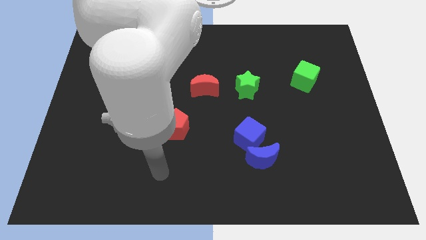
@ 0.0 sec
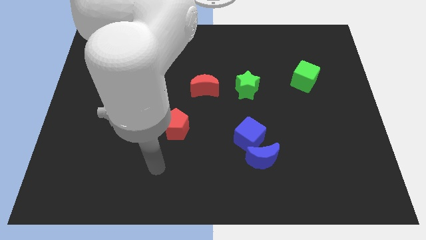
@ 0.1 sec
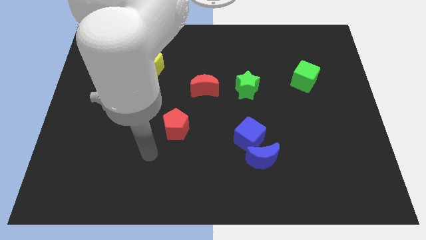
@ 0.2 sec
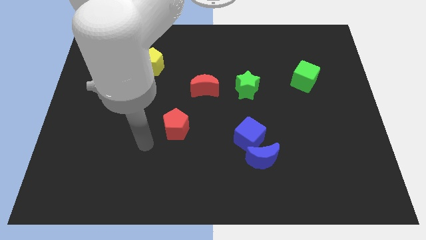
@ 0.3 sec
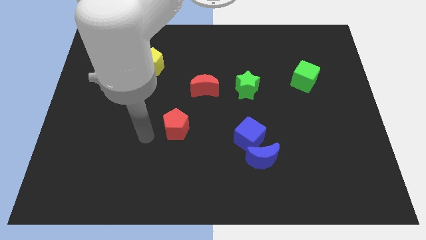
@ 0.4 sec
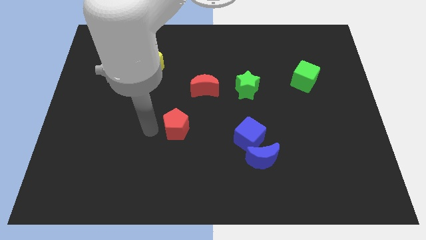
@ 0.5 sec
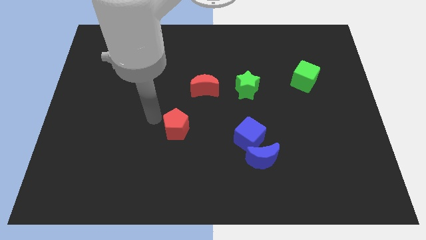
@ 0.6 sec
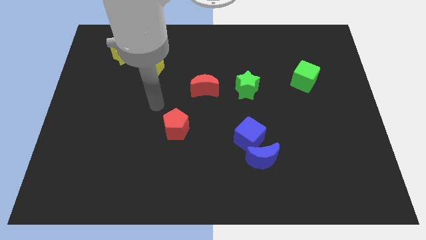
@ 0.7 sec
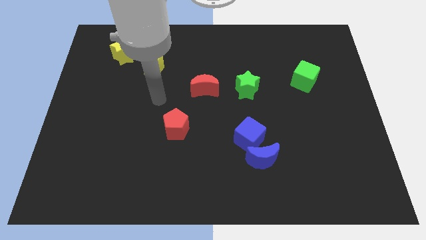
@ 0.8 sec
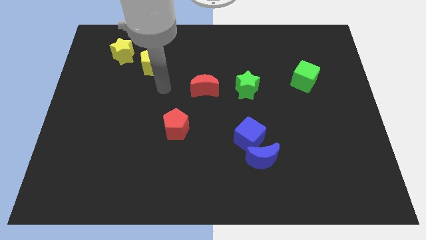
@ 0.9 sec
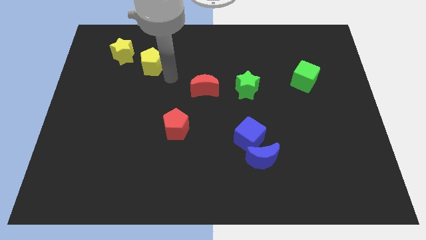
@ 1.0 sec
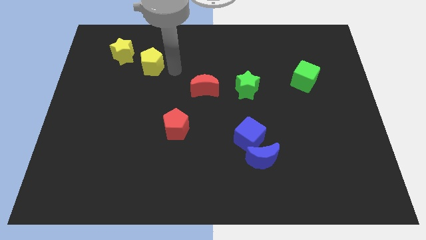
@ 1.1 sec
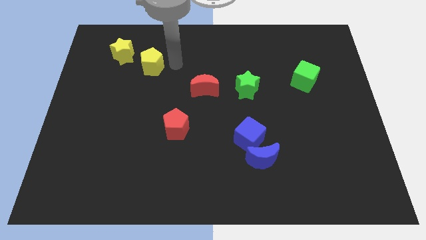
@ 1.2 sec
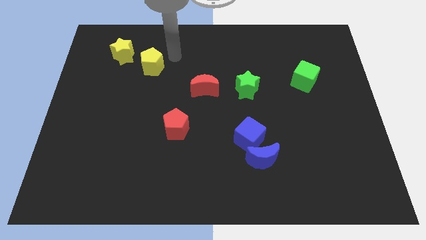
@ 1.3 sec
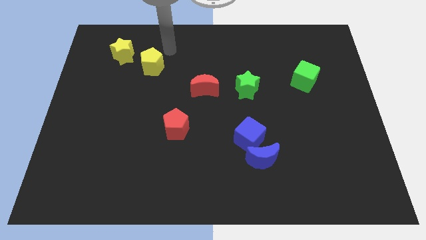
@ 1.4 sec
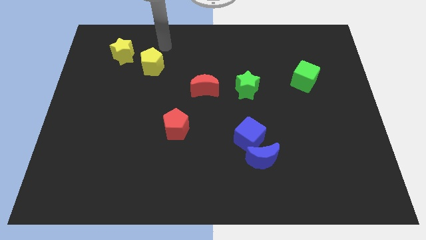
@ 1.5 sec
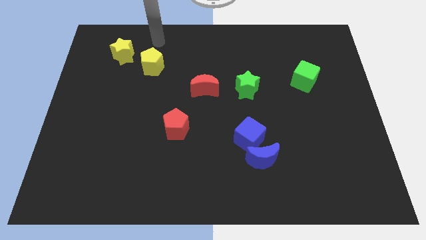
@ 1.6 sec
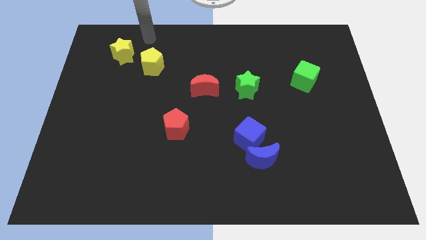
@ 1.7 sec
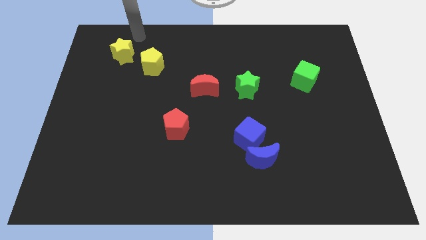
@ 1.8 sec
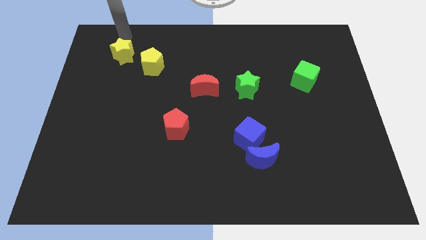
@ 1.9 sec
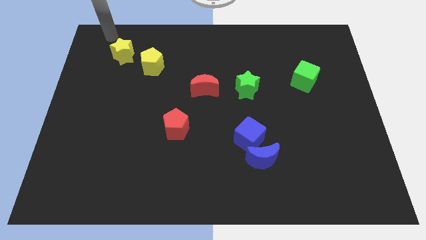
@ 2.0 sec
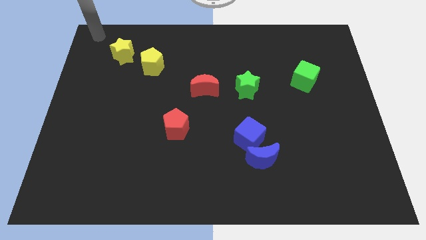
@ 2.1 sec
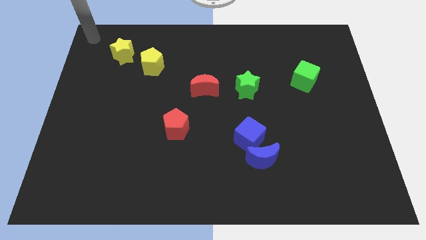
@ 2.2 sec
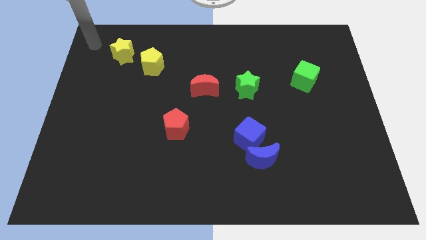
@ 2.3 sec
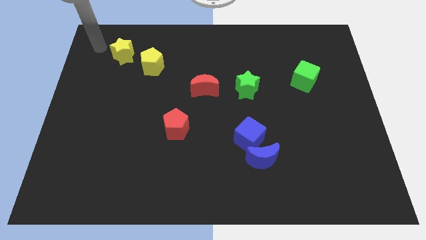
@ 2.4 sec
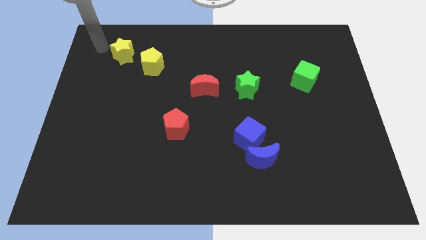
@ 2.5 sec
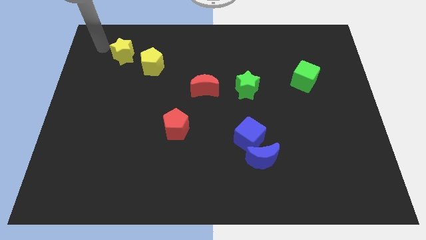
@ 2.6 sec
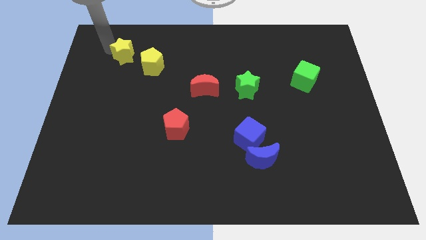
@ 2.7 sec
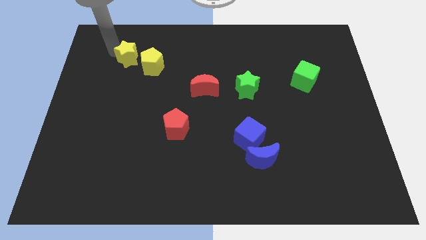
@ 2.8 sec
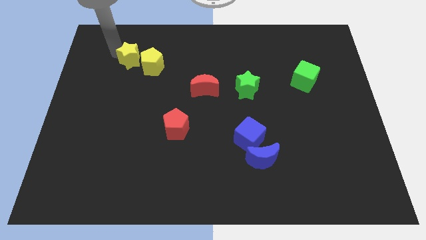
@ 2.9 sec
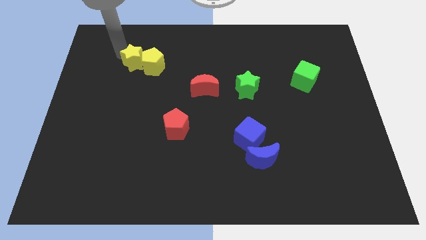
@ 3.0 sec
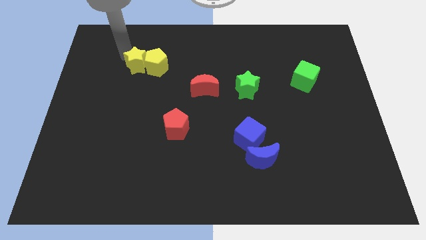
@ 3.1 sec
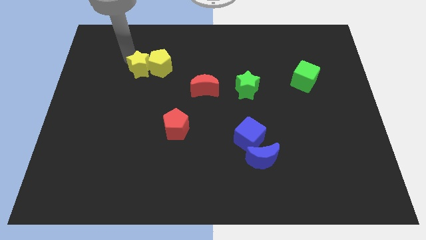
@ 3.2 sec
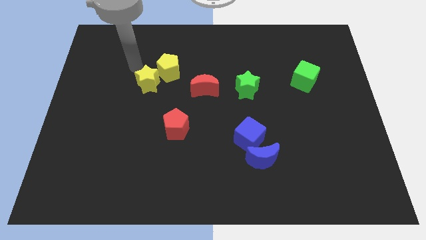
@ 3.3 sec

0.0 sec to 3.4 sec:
push the yellow star to the left side of the yellow pentagon

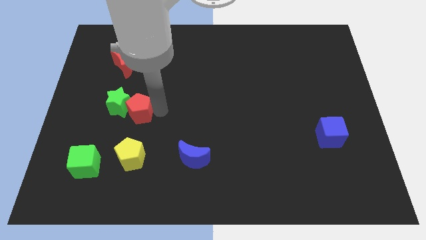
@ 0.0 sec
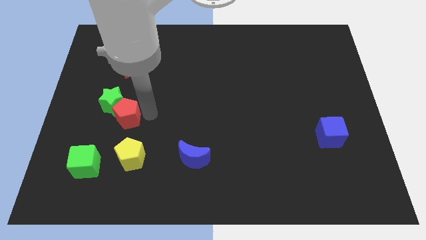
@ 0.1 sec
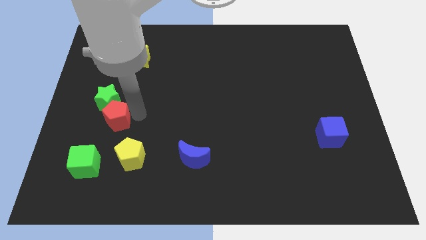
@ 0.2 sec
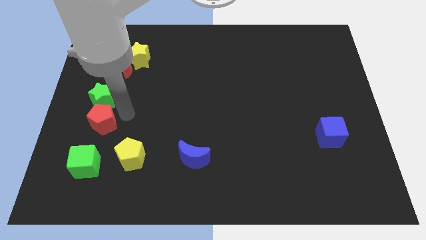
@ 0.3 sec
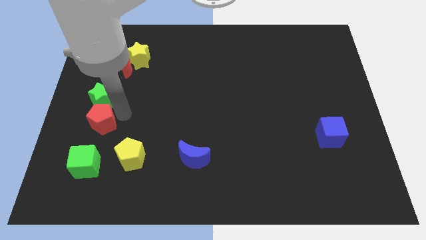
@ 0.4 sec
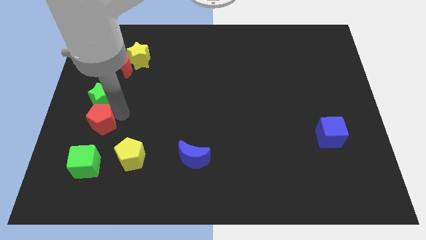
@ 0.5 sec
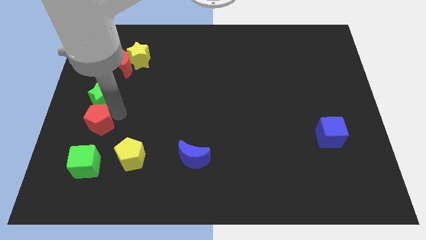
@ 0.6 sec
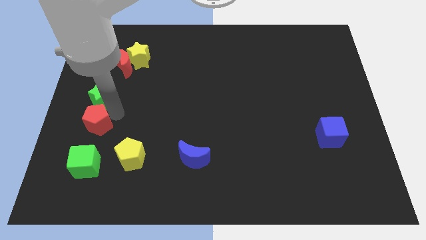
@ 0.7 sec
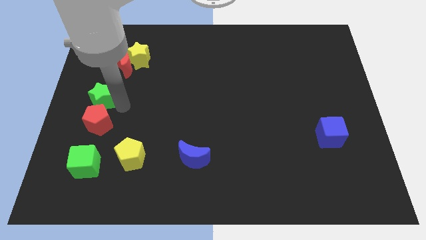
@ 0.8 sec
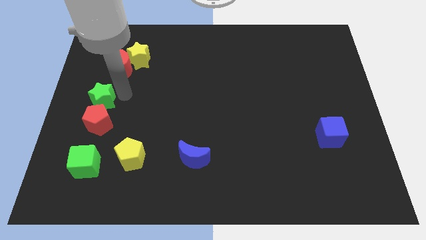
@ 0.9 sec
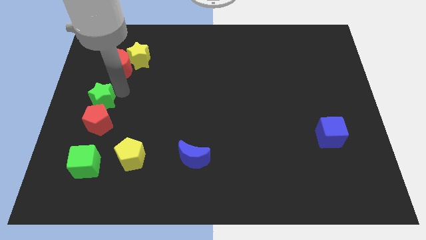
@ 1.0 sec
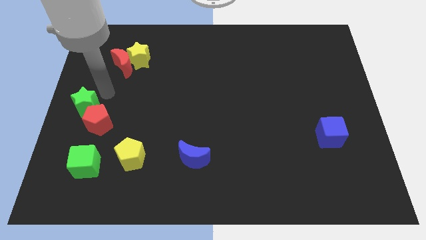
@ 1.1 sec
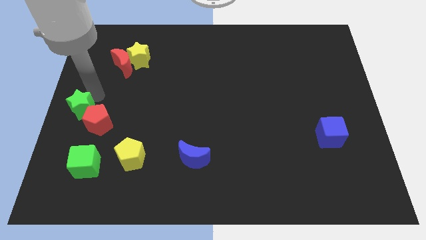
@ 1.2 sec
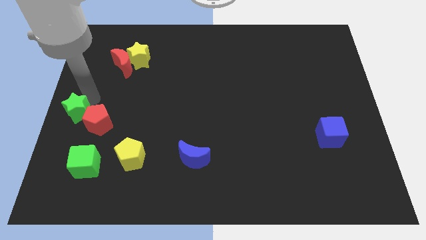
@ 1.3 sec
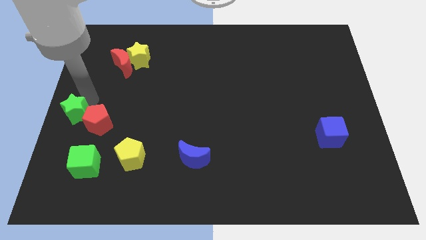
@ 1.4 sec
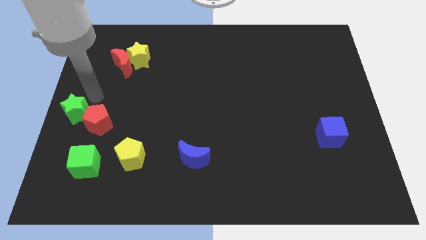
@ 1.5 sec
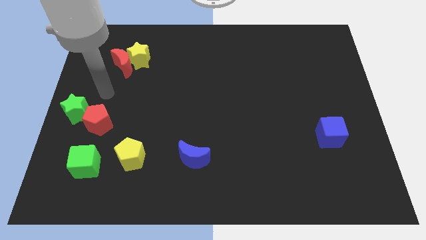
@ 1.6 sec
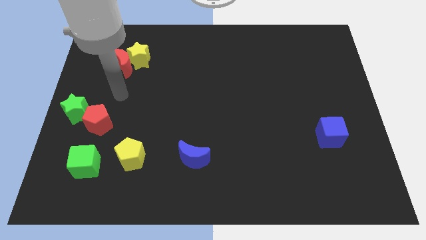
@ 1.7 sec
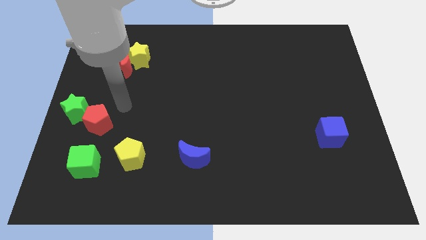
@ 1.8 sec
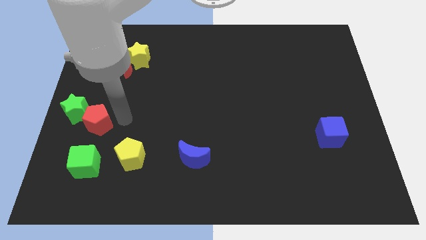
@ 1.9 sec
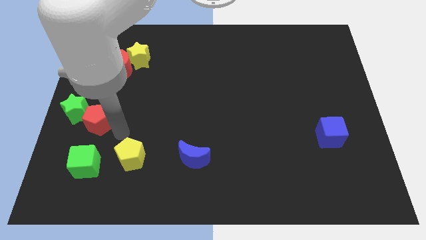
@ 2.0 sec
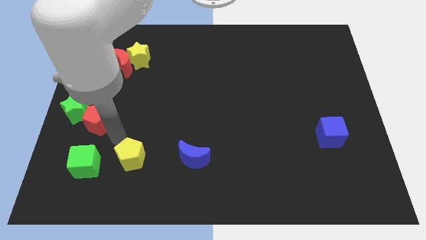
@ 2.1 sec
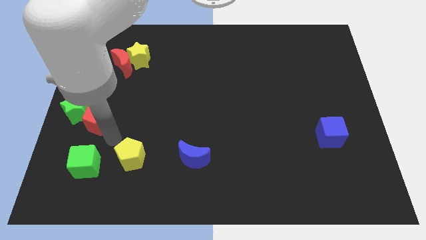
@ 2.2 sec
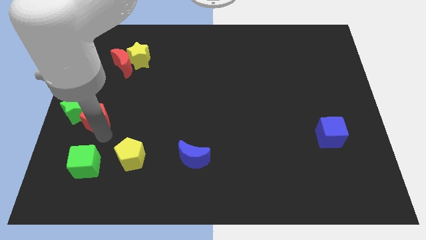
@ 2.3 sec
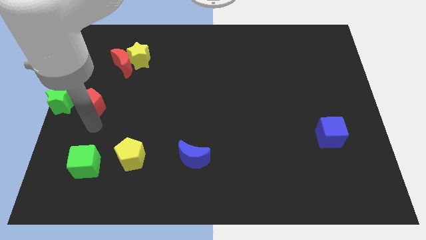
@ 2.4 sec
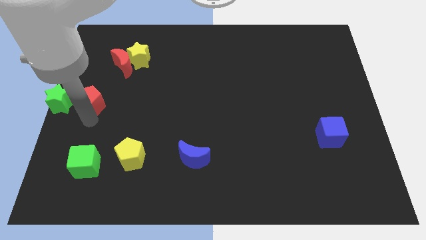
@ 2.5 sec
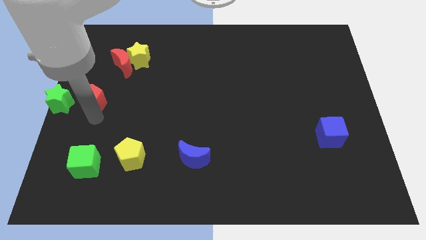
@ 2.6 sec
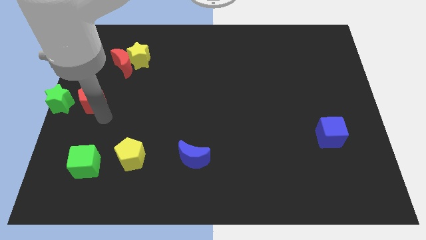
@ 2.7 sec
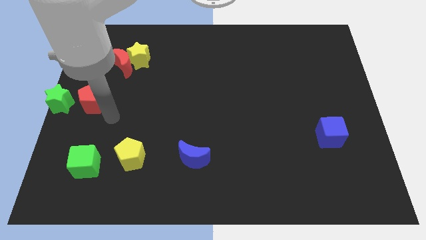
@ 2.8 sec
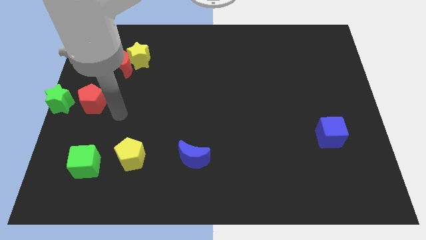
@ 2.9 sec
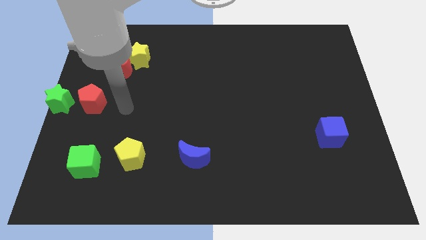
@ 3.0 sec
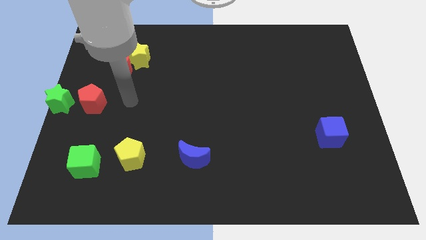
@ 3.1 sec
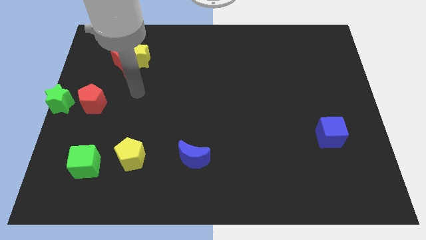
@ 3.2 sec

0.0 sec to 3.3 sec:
make a horizontal line with the green star and red pentagon

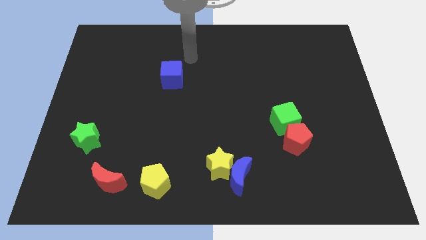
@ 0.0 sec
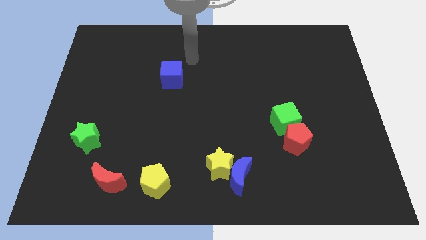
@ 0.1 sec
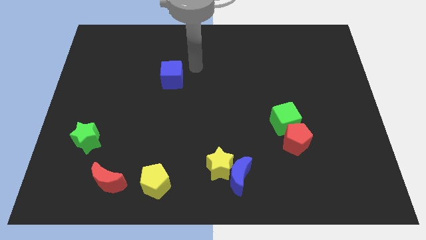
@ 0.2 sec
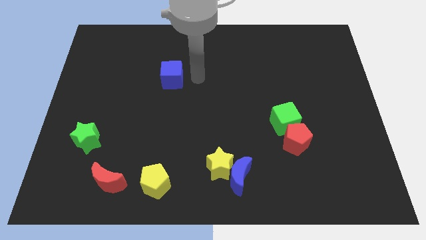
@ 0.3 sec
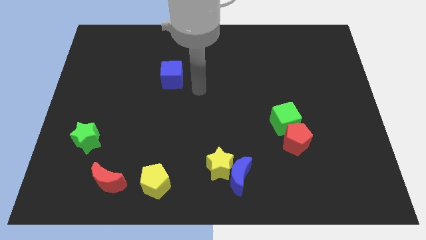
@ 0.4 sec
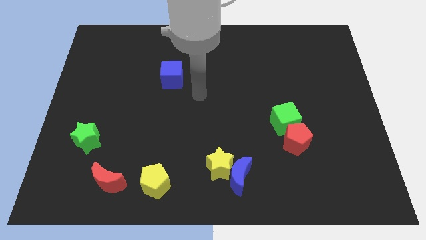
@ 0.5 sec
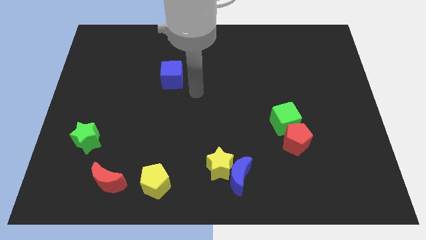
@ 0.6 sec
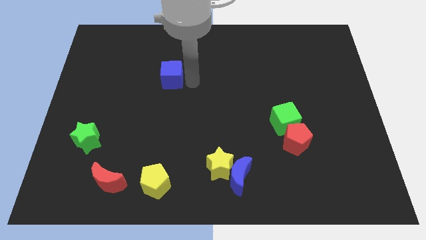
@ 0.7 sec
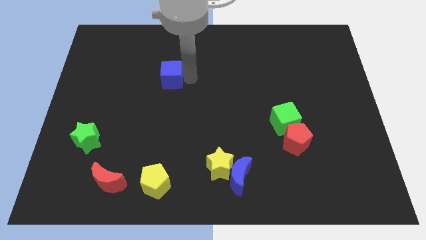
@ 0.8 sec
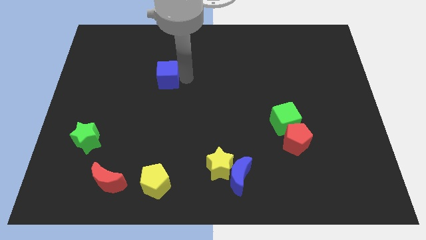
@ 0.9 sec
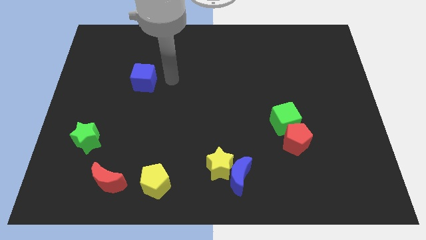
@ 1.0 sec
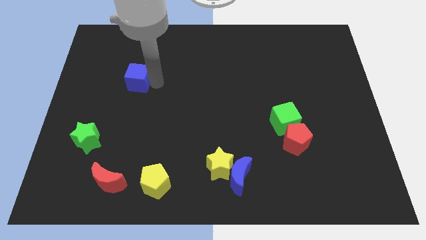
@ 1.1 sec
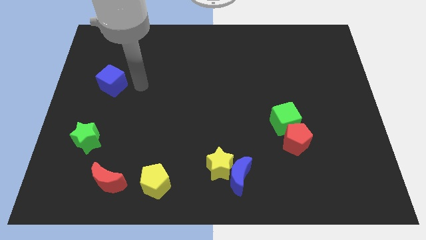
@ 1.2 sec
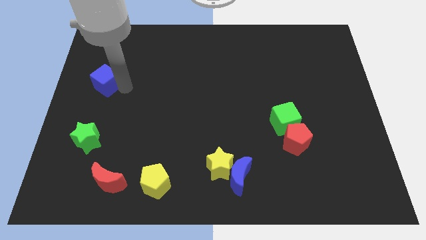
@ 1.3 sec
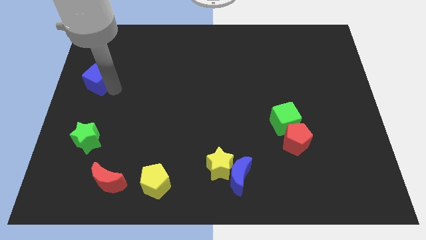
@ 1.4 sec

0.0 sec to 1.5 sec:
move the blue cube slightly towards the left

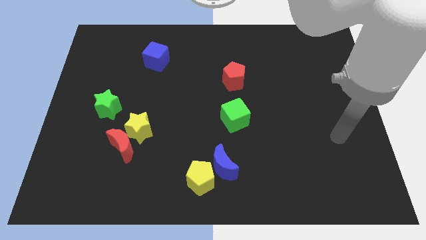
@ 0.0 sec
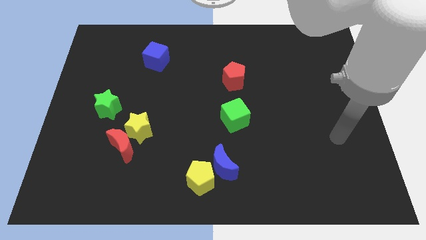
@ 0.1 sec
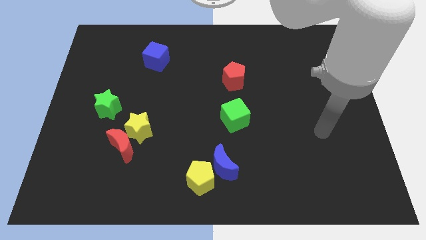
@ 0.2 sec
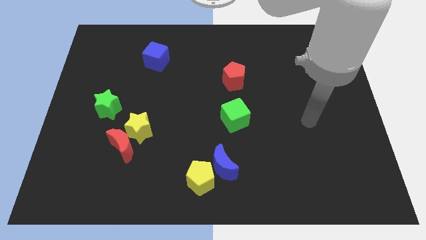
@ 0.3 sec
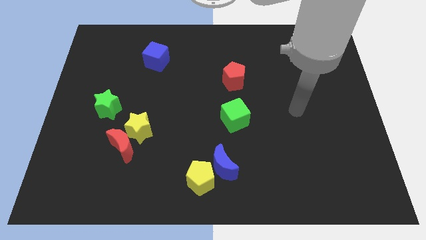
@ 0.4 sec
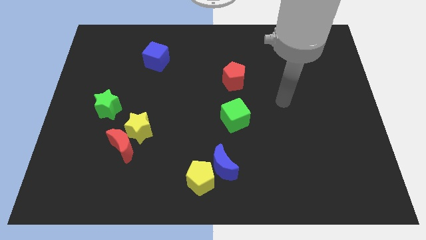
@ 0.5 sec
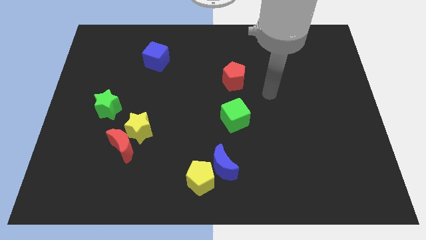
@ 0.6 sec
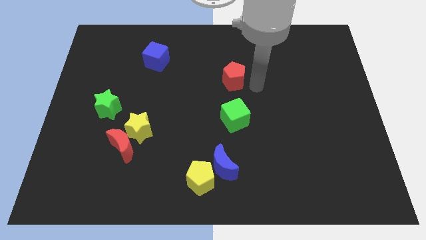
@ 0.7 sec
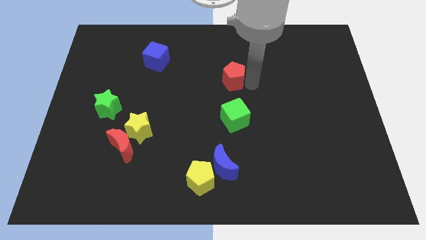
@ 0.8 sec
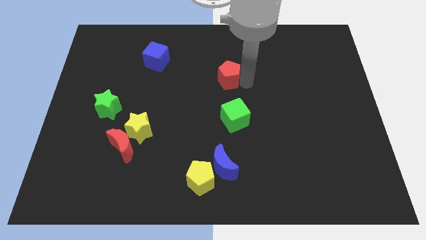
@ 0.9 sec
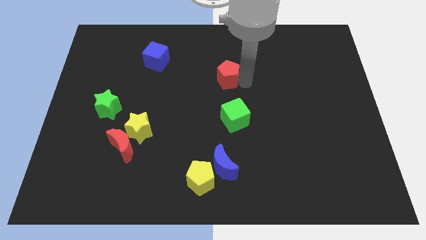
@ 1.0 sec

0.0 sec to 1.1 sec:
tap on the right side of red pentagon
